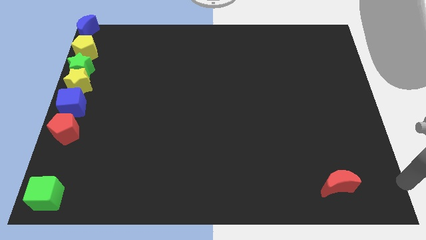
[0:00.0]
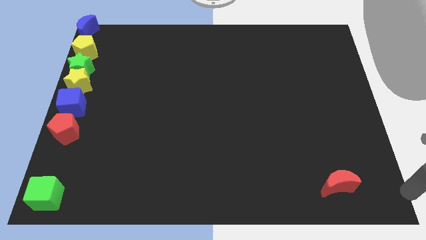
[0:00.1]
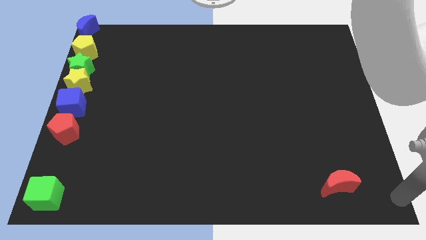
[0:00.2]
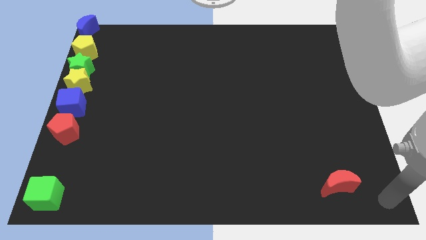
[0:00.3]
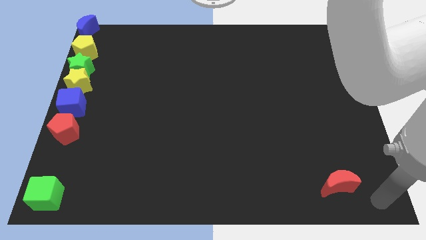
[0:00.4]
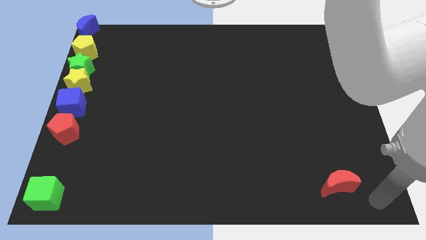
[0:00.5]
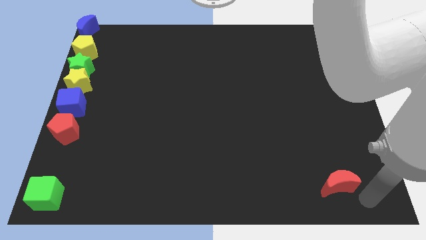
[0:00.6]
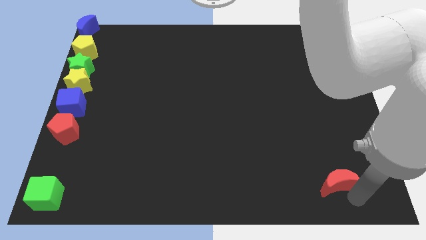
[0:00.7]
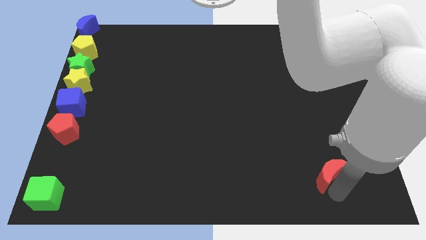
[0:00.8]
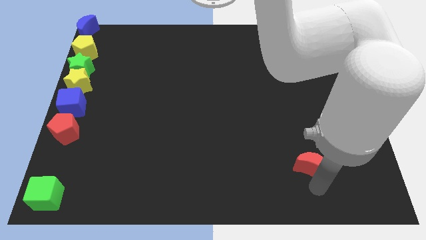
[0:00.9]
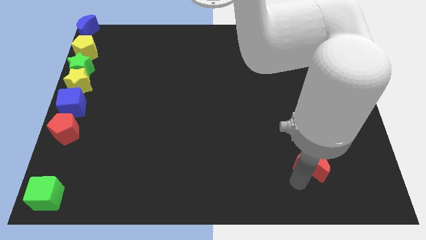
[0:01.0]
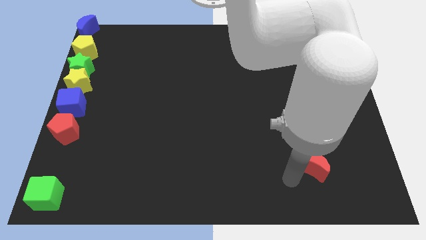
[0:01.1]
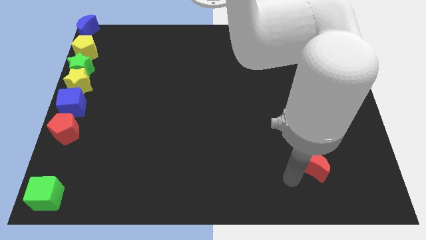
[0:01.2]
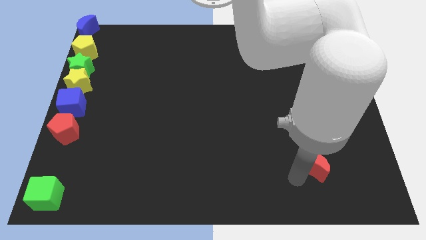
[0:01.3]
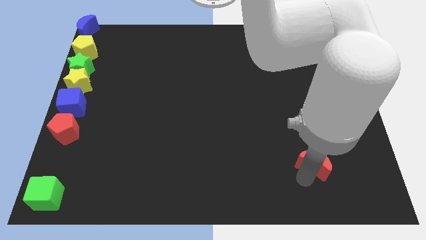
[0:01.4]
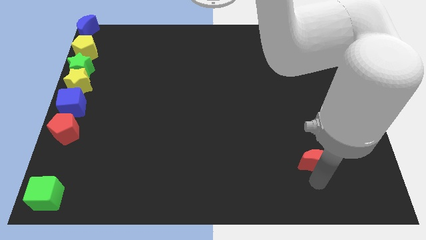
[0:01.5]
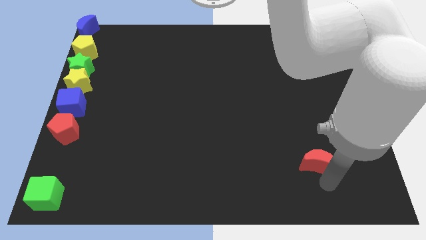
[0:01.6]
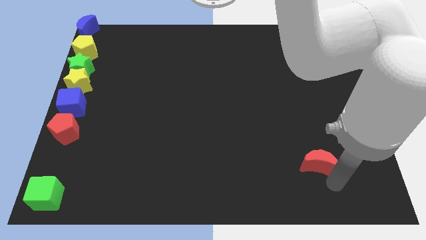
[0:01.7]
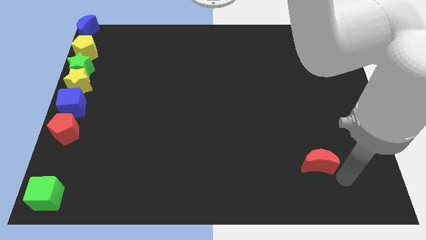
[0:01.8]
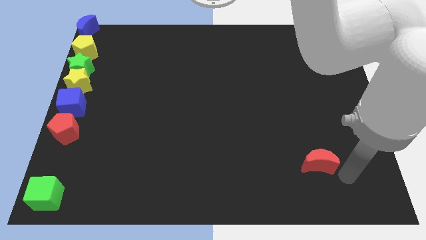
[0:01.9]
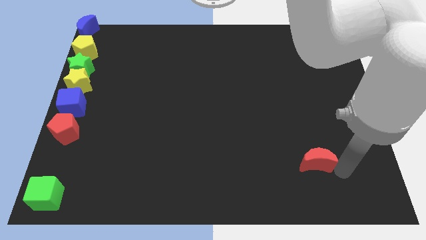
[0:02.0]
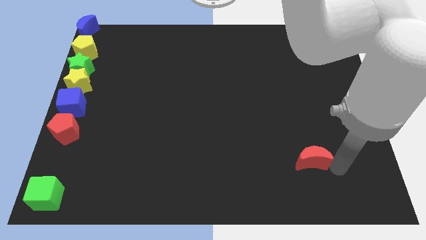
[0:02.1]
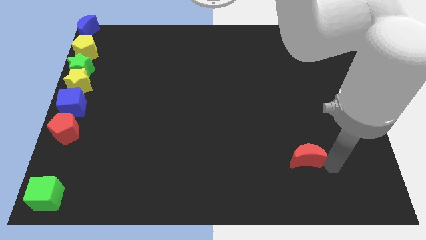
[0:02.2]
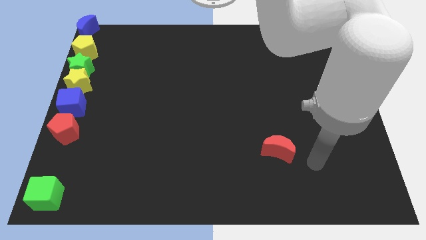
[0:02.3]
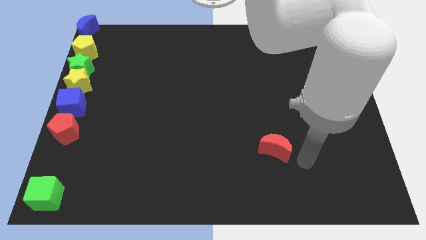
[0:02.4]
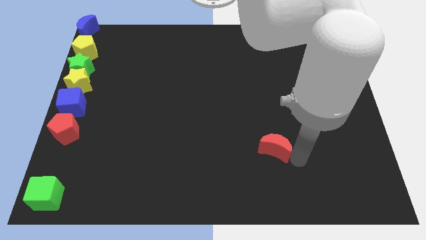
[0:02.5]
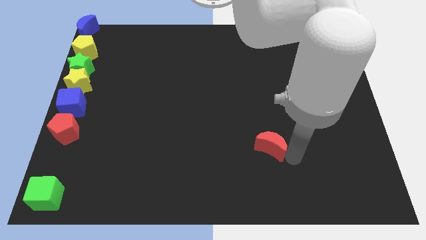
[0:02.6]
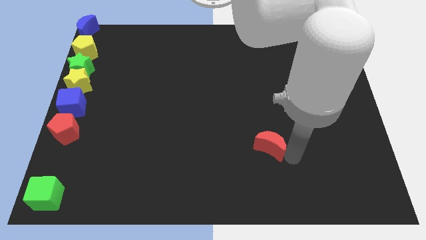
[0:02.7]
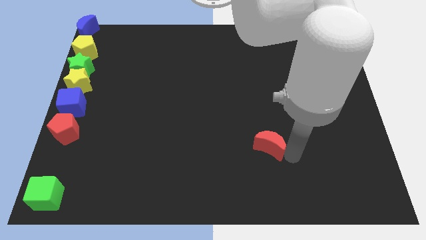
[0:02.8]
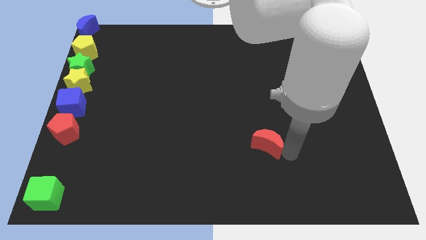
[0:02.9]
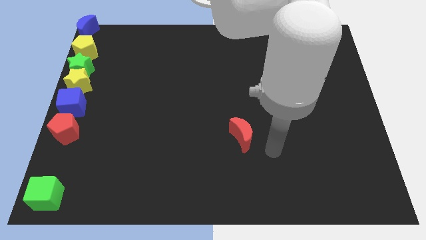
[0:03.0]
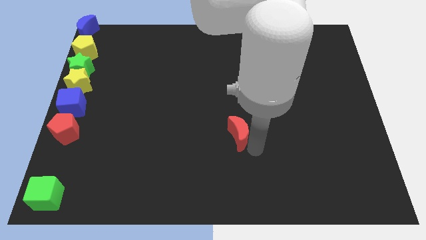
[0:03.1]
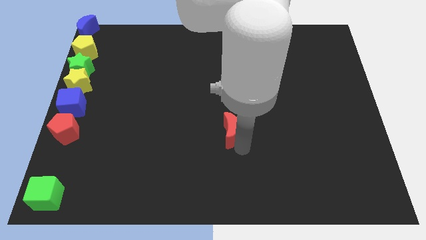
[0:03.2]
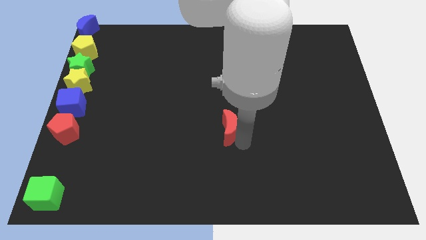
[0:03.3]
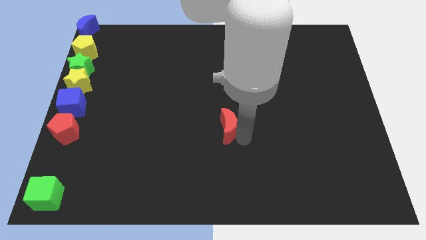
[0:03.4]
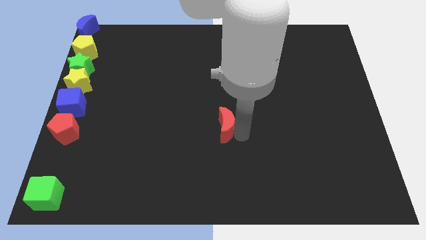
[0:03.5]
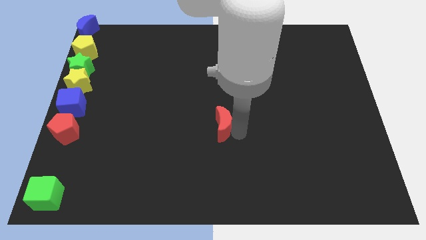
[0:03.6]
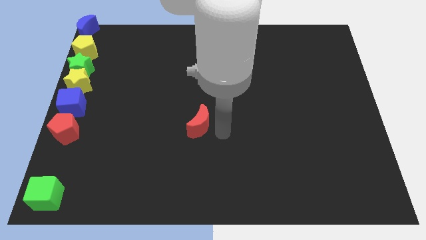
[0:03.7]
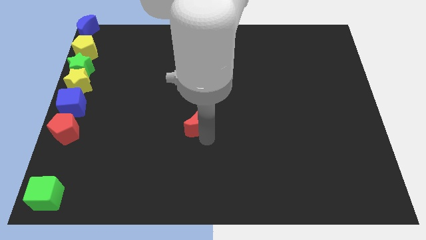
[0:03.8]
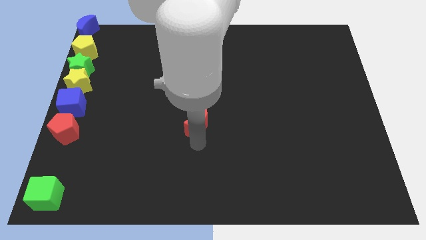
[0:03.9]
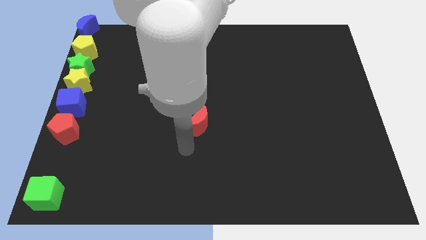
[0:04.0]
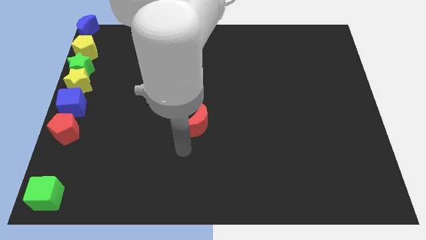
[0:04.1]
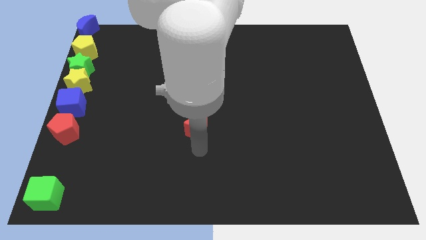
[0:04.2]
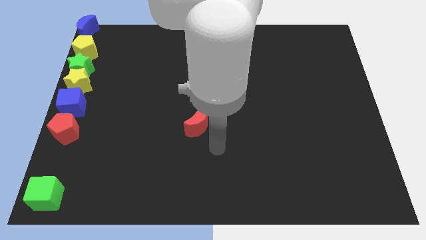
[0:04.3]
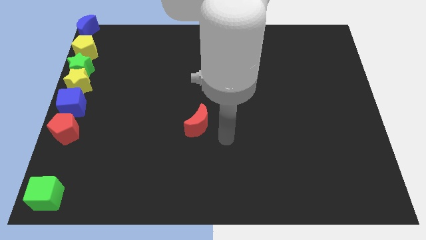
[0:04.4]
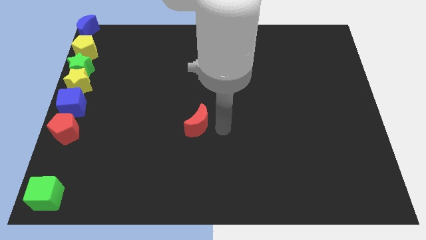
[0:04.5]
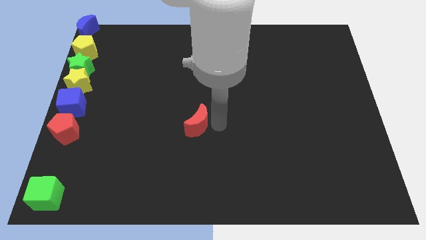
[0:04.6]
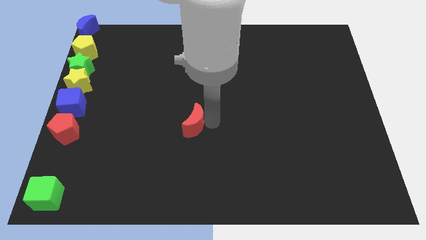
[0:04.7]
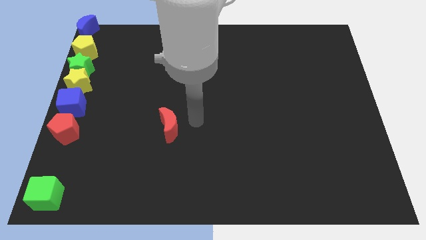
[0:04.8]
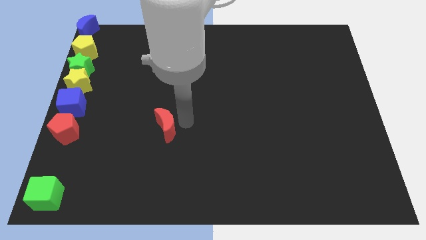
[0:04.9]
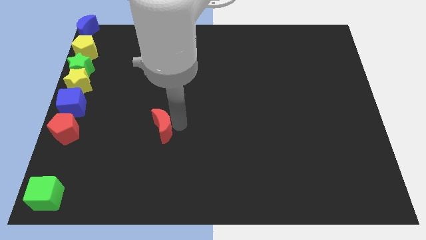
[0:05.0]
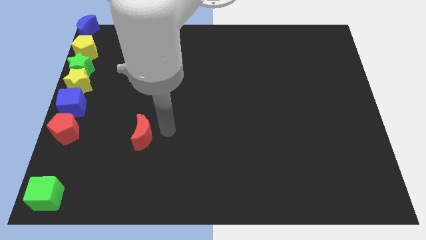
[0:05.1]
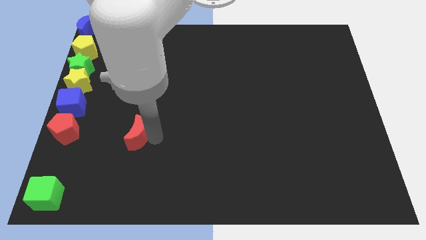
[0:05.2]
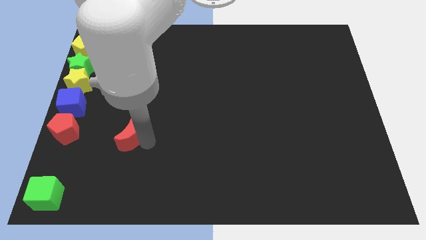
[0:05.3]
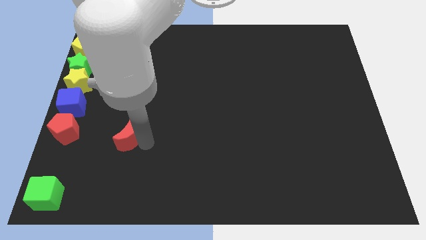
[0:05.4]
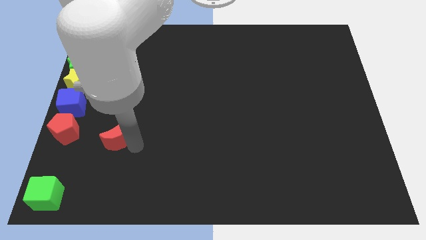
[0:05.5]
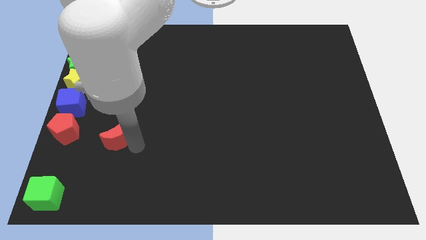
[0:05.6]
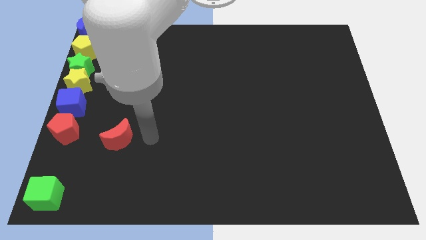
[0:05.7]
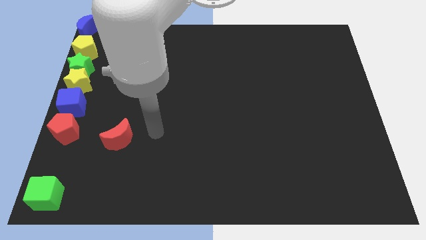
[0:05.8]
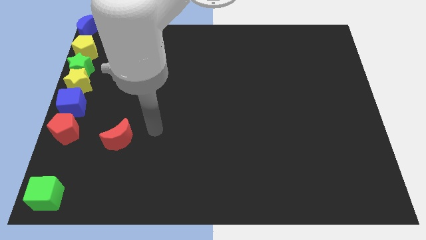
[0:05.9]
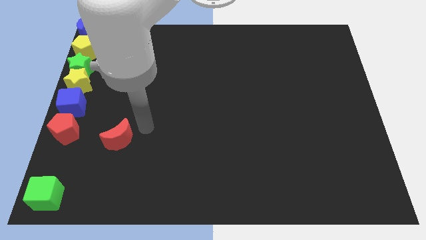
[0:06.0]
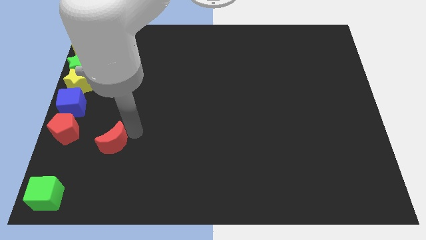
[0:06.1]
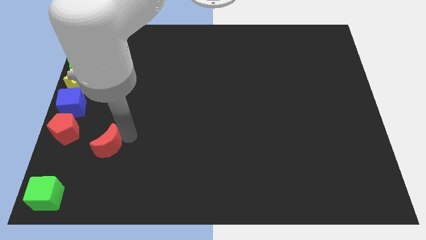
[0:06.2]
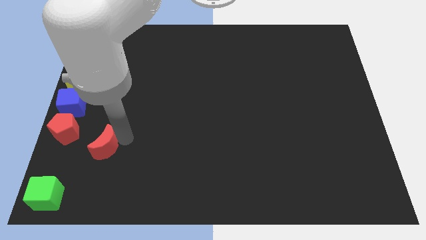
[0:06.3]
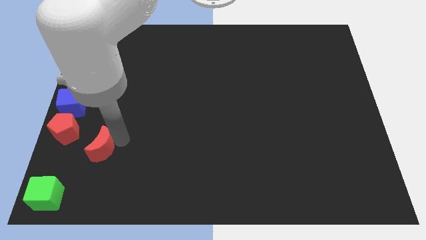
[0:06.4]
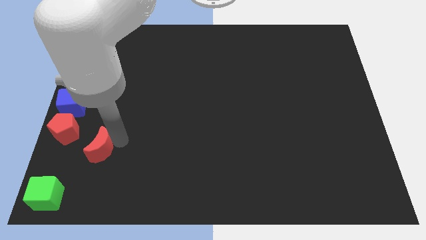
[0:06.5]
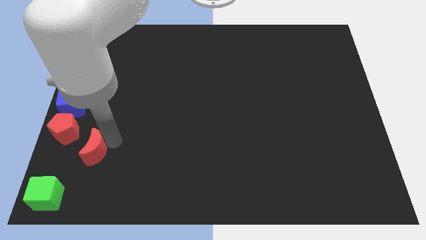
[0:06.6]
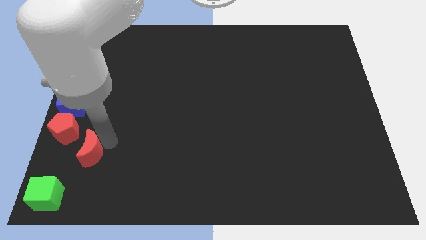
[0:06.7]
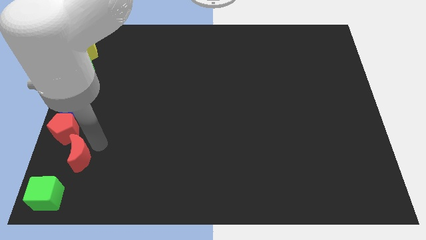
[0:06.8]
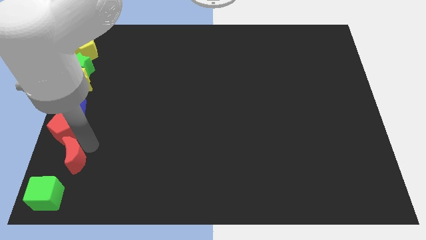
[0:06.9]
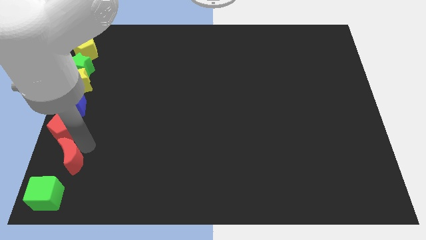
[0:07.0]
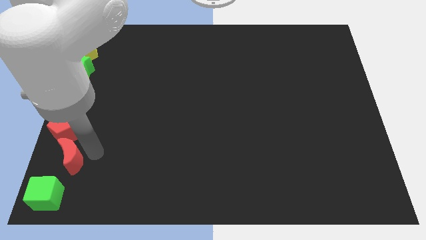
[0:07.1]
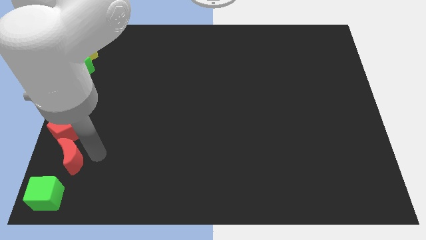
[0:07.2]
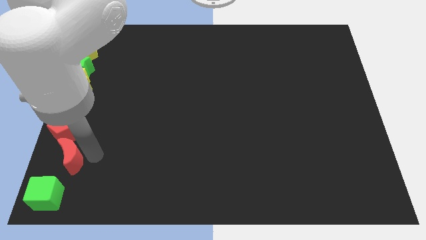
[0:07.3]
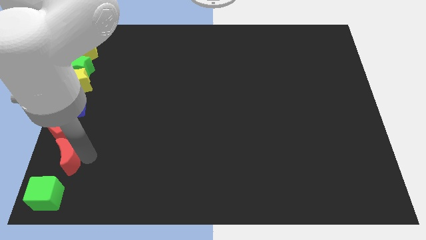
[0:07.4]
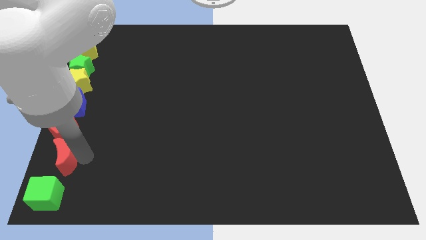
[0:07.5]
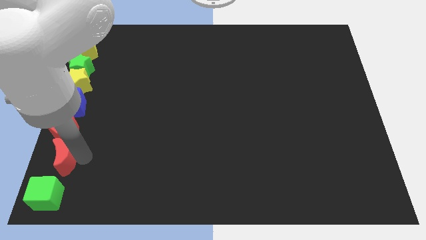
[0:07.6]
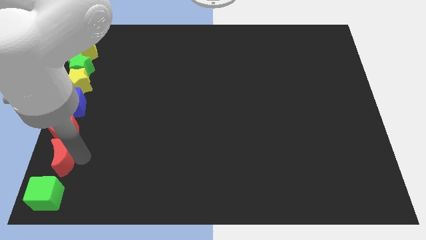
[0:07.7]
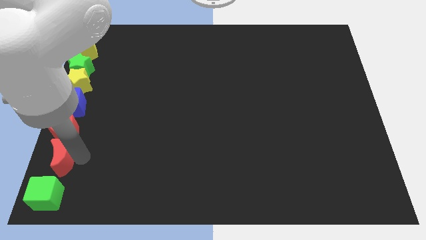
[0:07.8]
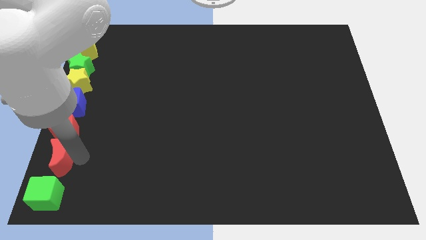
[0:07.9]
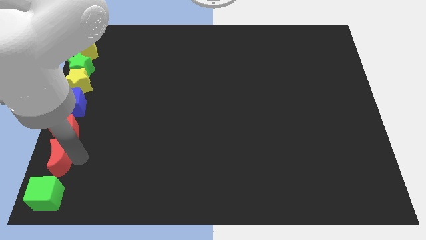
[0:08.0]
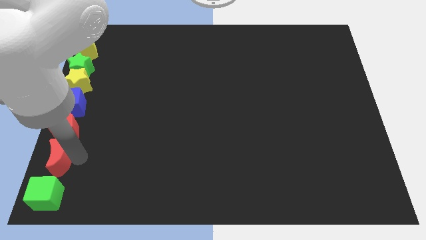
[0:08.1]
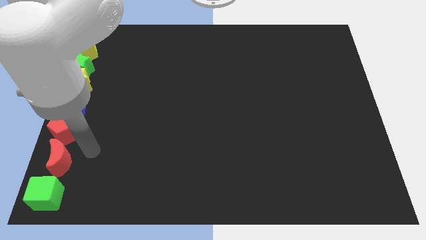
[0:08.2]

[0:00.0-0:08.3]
push the red crescent in between the two blocks

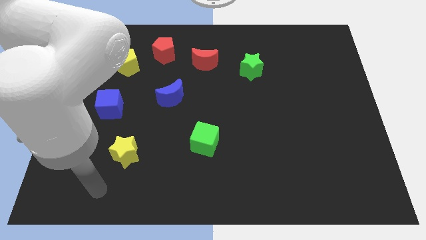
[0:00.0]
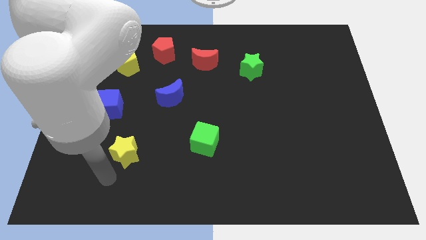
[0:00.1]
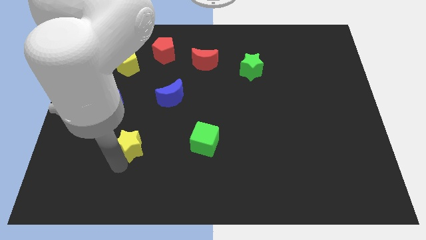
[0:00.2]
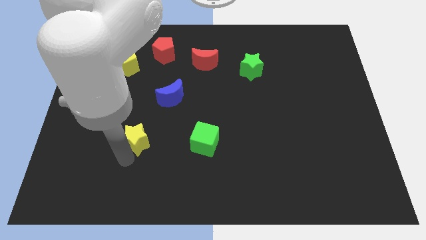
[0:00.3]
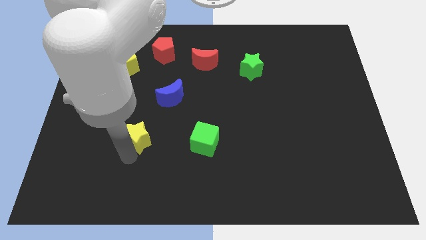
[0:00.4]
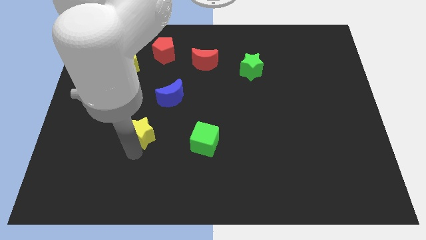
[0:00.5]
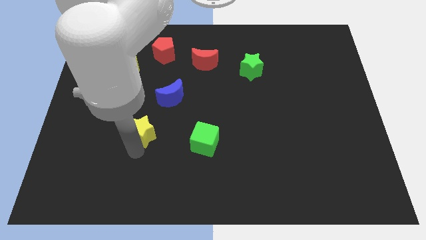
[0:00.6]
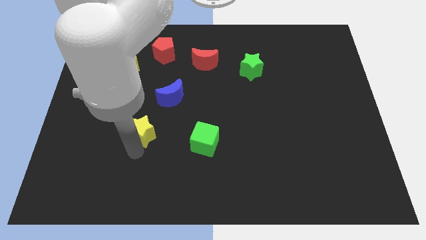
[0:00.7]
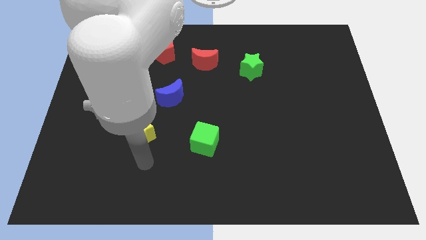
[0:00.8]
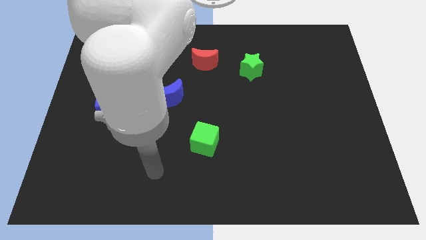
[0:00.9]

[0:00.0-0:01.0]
slightly push the yellow star upwards
